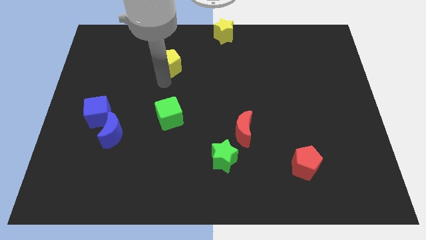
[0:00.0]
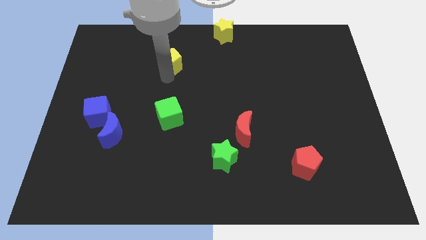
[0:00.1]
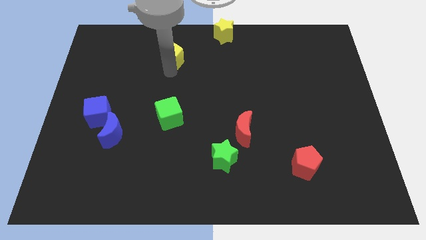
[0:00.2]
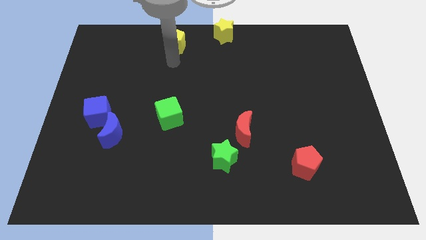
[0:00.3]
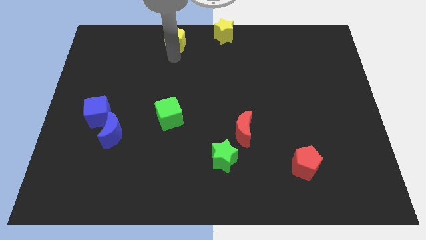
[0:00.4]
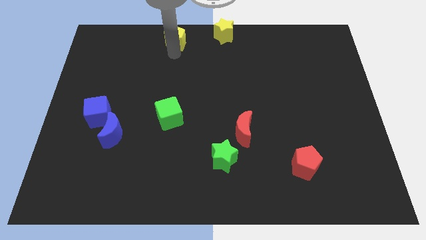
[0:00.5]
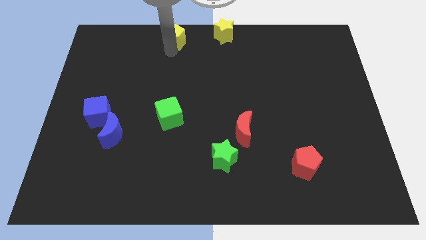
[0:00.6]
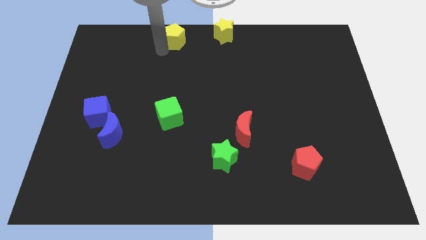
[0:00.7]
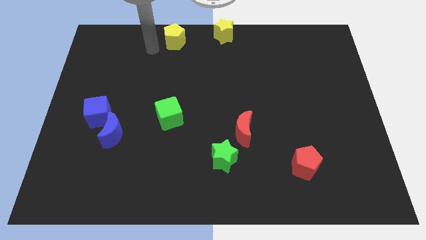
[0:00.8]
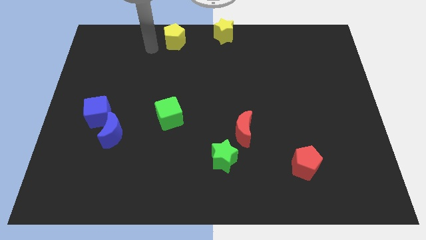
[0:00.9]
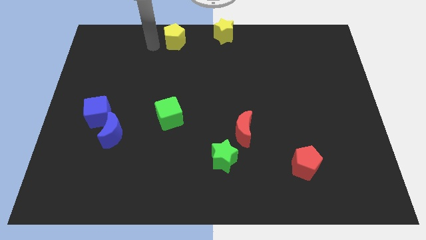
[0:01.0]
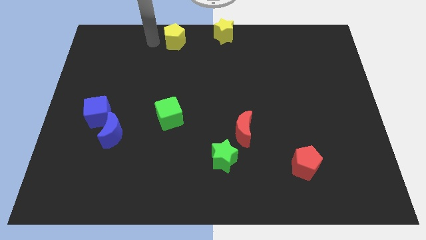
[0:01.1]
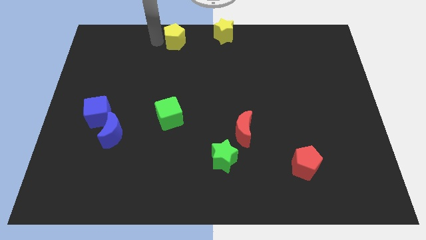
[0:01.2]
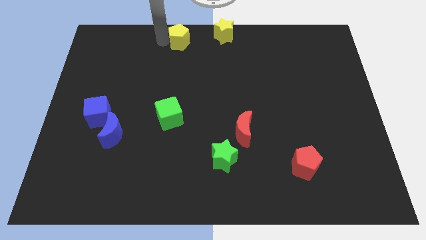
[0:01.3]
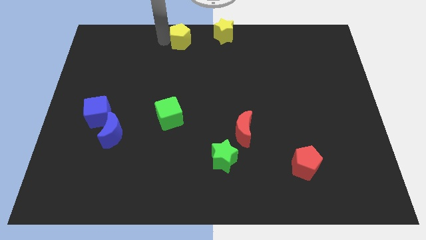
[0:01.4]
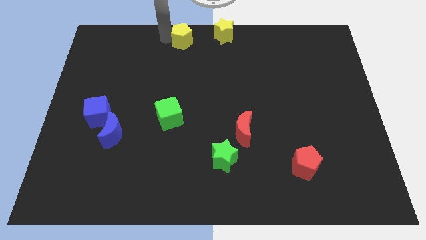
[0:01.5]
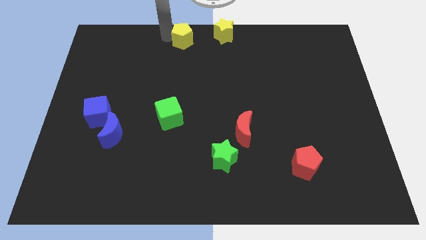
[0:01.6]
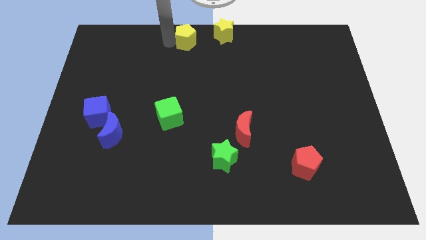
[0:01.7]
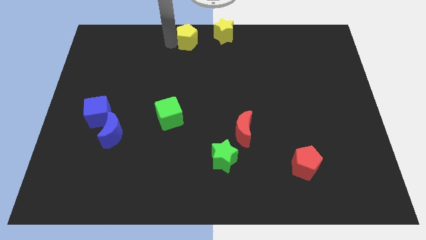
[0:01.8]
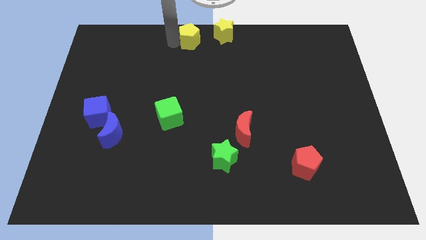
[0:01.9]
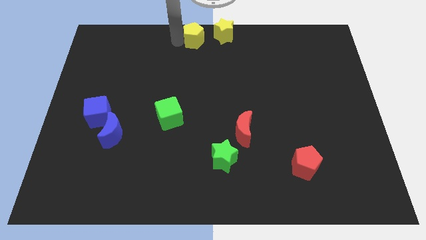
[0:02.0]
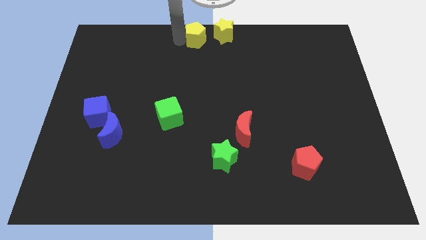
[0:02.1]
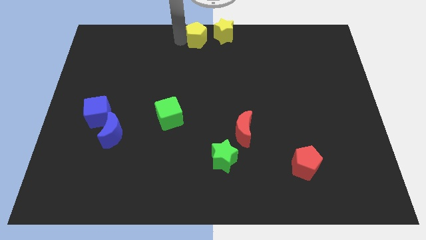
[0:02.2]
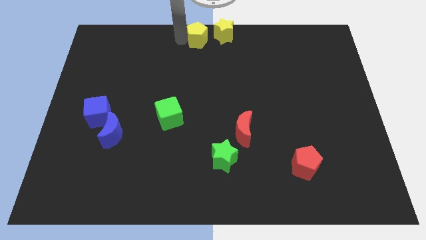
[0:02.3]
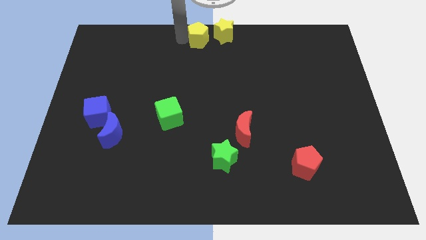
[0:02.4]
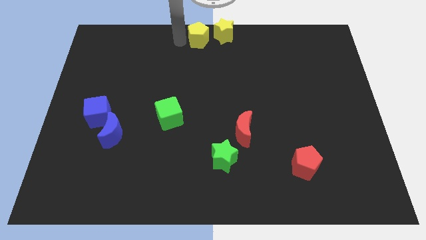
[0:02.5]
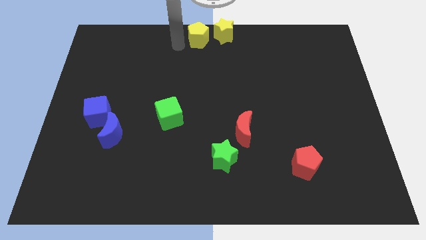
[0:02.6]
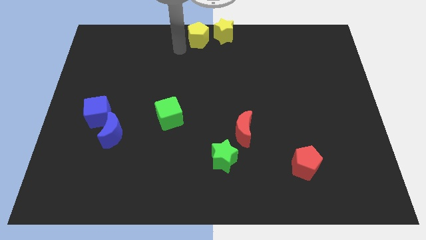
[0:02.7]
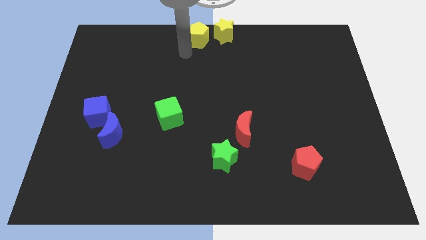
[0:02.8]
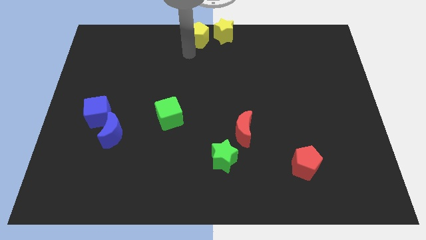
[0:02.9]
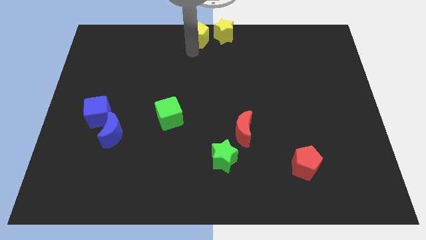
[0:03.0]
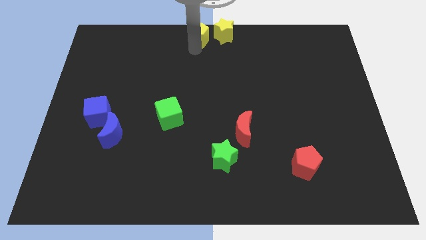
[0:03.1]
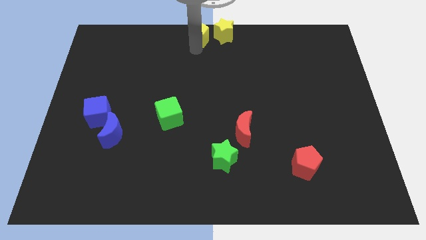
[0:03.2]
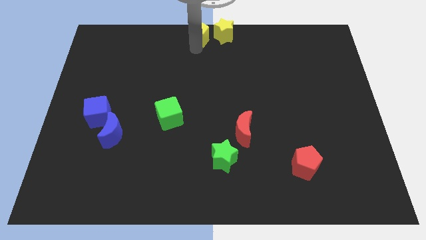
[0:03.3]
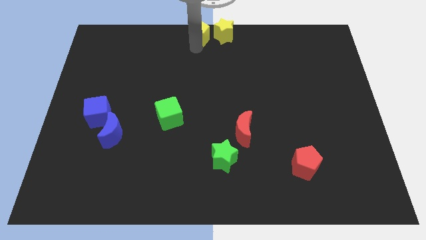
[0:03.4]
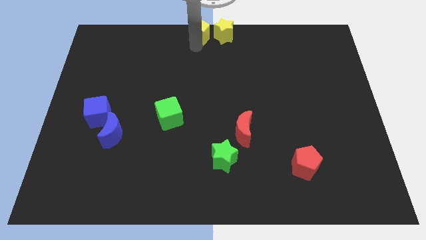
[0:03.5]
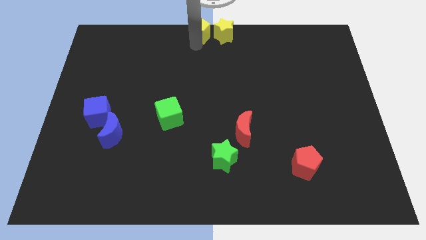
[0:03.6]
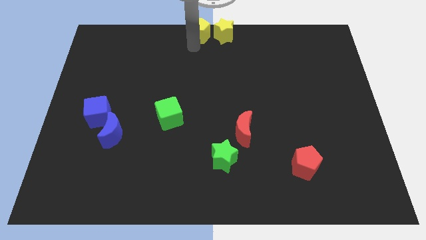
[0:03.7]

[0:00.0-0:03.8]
place the yellow pentagon diagonal to top right of blue cube

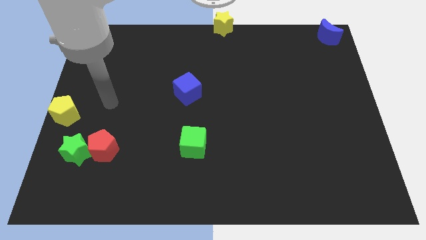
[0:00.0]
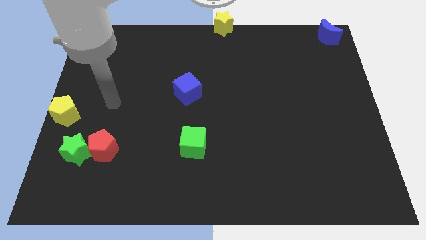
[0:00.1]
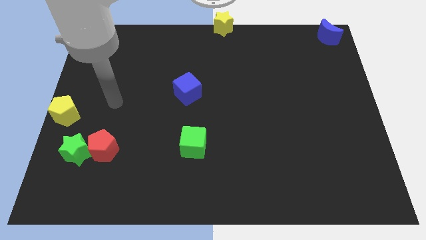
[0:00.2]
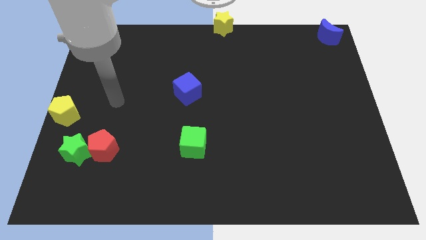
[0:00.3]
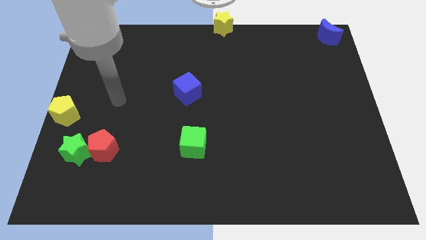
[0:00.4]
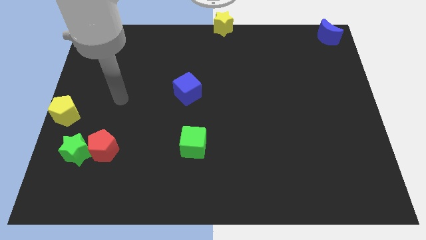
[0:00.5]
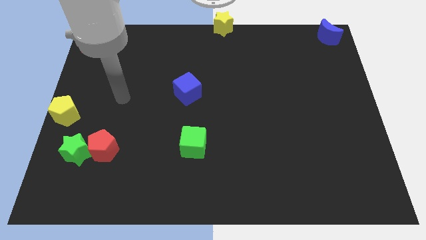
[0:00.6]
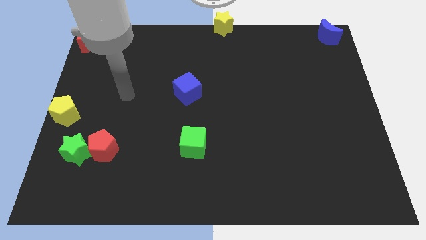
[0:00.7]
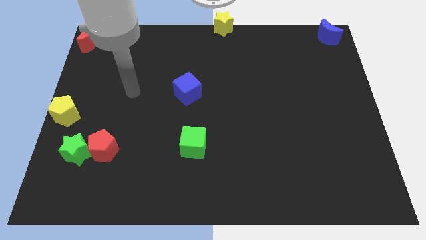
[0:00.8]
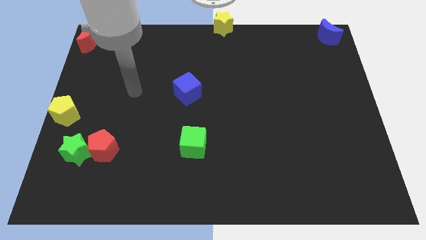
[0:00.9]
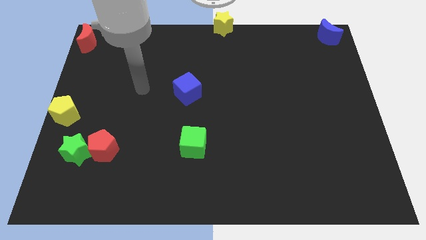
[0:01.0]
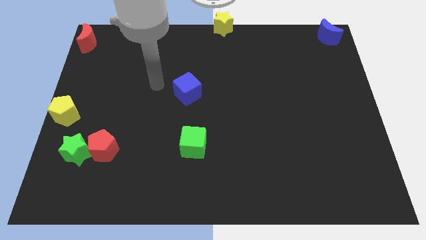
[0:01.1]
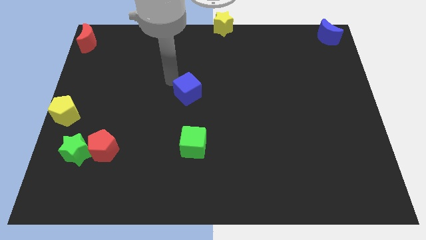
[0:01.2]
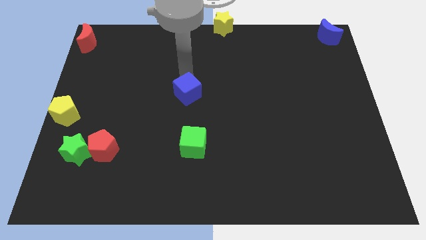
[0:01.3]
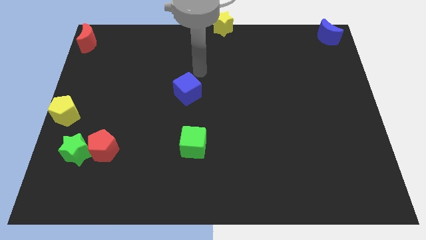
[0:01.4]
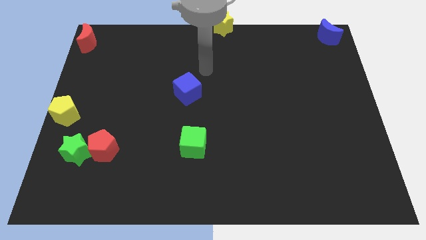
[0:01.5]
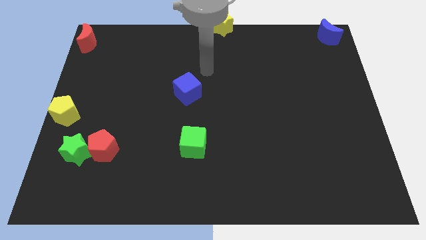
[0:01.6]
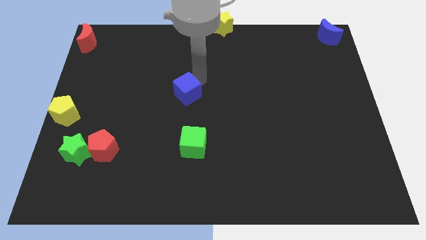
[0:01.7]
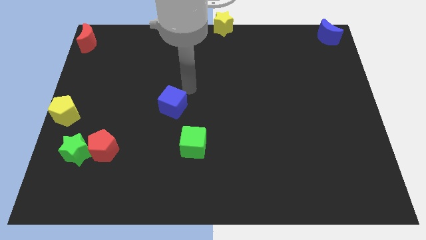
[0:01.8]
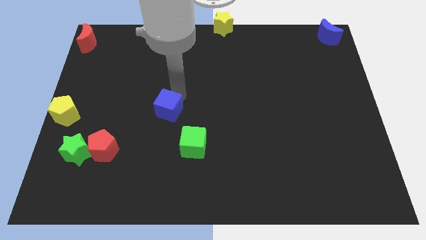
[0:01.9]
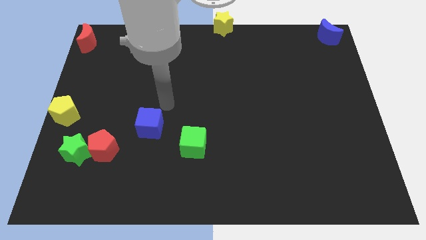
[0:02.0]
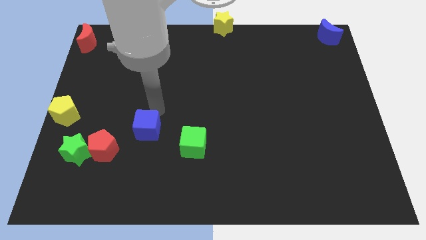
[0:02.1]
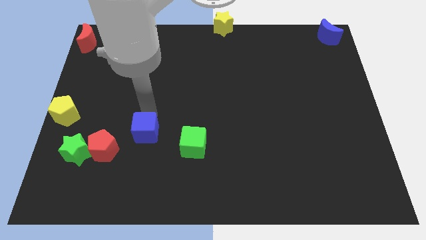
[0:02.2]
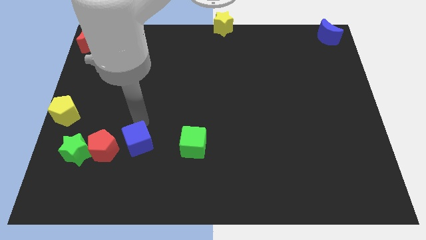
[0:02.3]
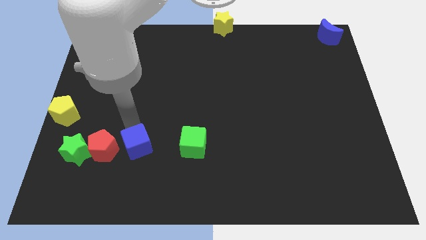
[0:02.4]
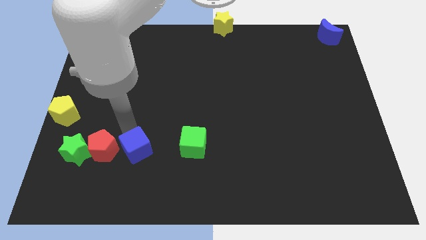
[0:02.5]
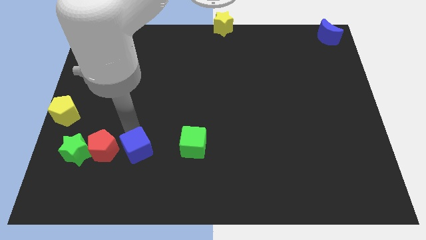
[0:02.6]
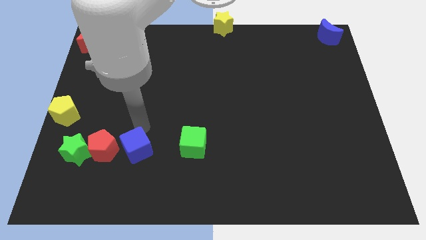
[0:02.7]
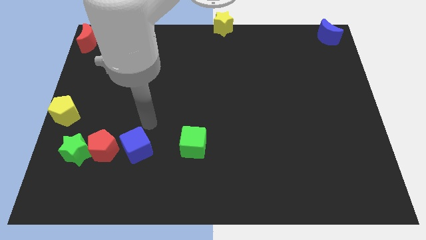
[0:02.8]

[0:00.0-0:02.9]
place the blue cube beside the red pentagon to form a horizontal line

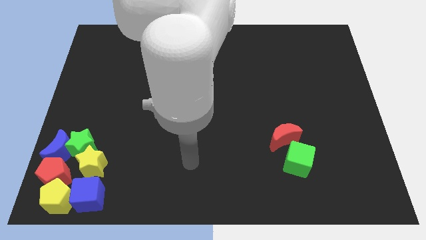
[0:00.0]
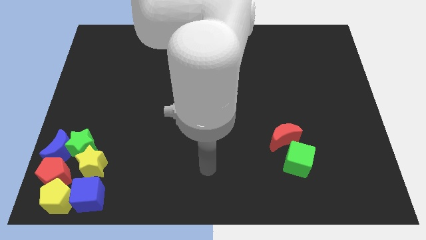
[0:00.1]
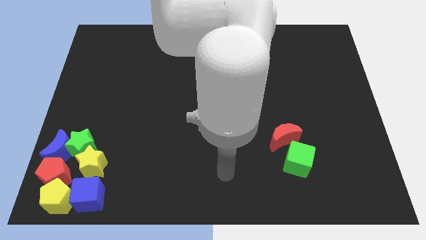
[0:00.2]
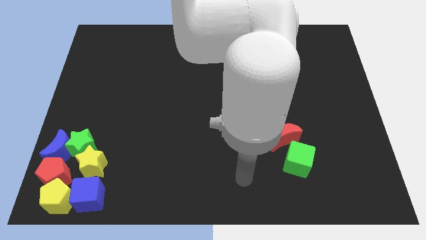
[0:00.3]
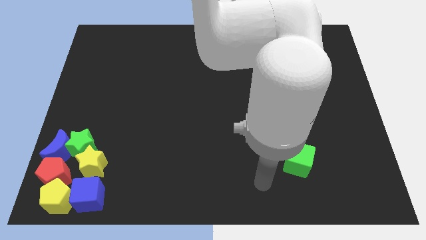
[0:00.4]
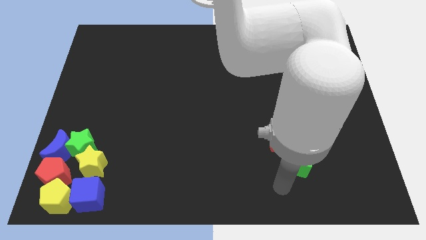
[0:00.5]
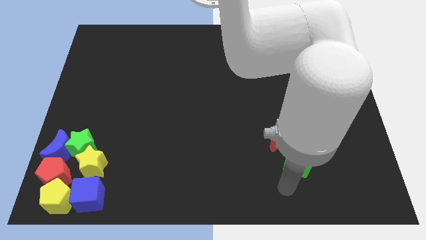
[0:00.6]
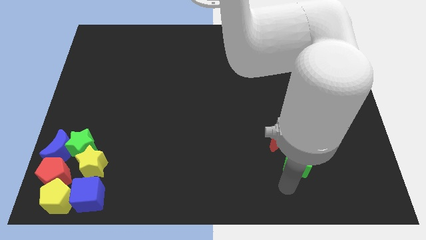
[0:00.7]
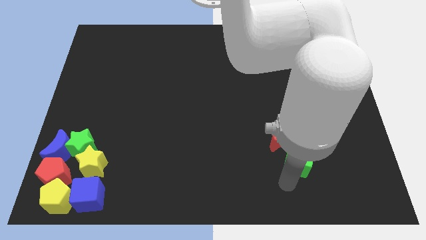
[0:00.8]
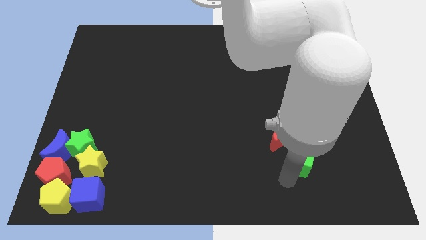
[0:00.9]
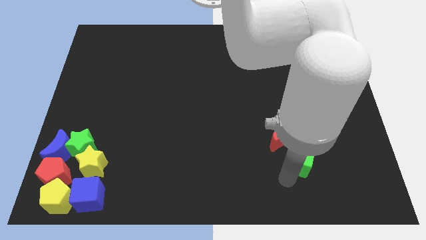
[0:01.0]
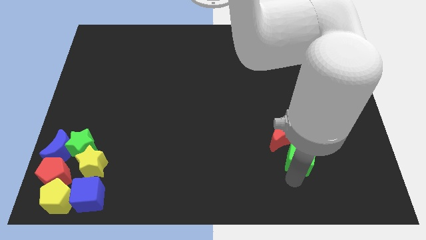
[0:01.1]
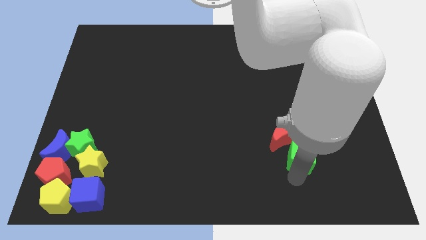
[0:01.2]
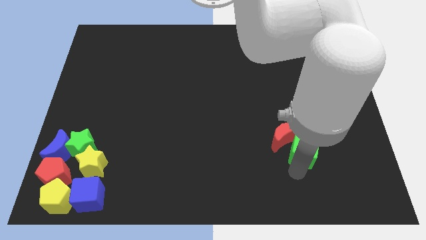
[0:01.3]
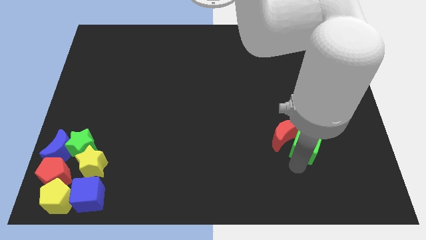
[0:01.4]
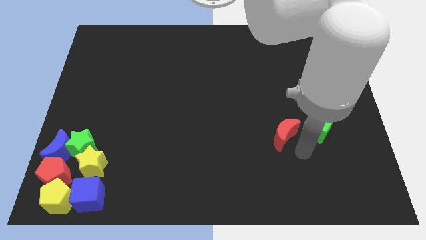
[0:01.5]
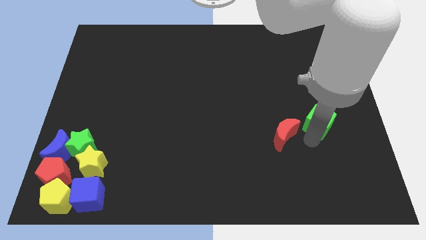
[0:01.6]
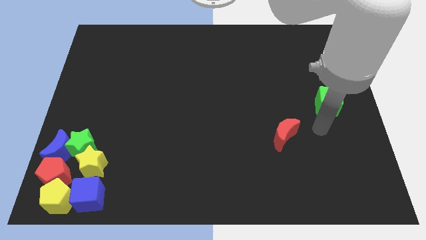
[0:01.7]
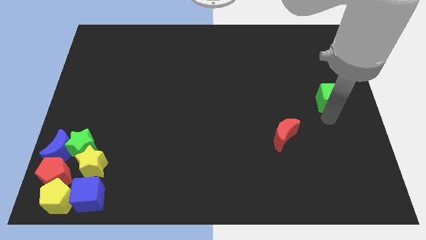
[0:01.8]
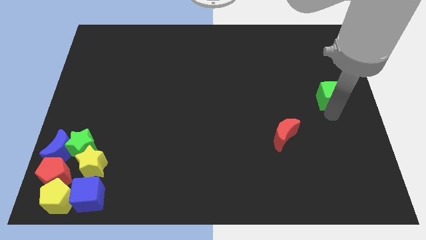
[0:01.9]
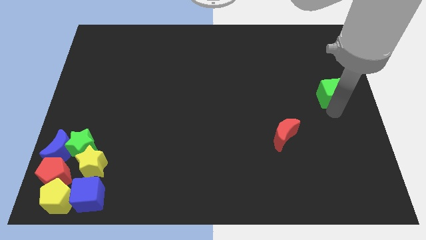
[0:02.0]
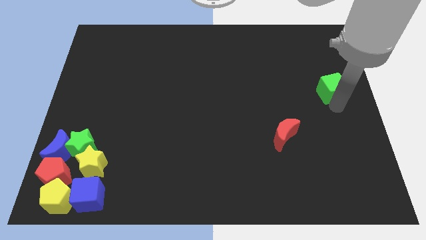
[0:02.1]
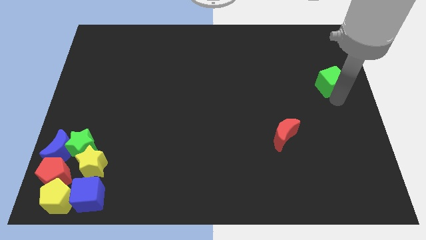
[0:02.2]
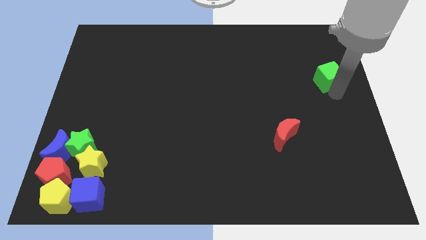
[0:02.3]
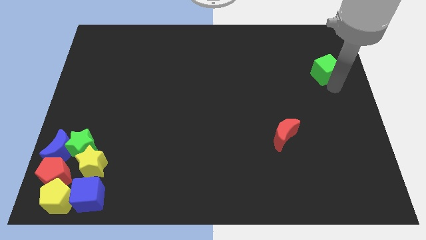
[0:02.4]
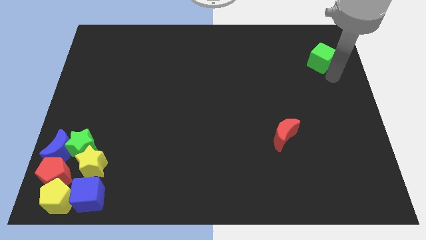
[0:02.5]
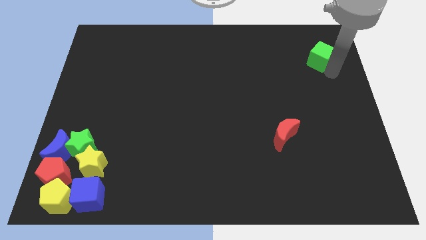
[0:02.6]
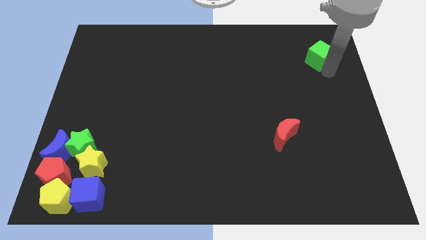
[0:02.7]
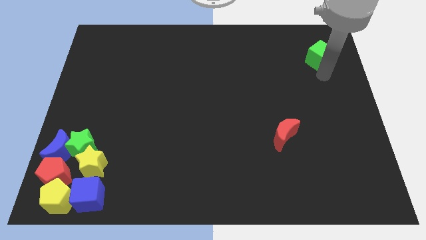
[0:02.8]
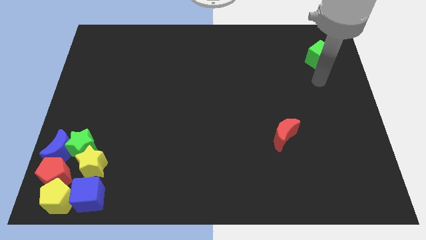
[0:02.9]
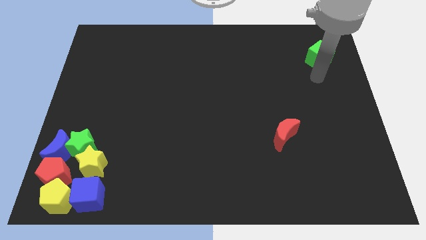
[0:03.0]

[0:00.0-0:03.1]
separate green cube from red moon
